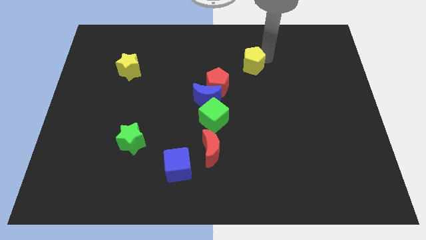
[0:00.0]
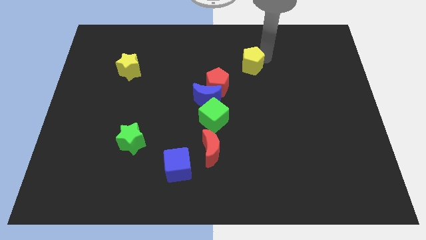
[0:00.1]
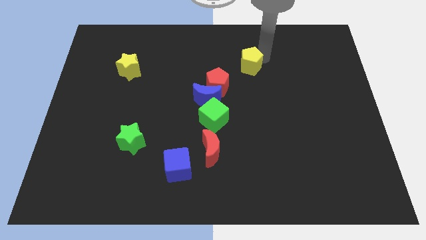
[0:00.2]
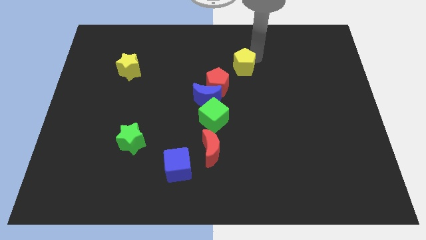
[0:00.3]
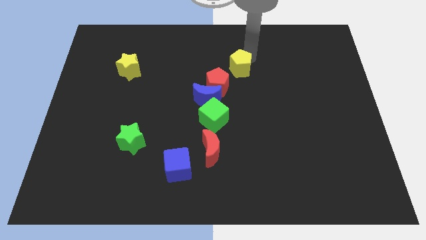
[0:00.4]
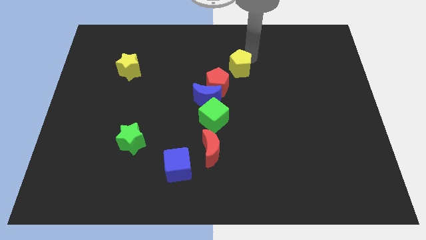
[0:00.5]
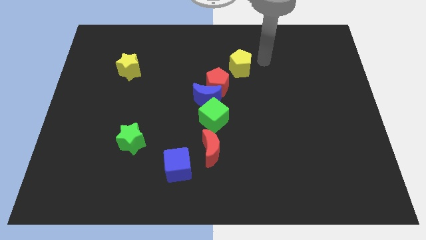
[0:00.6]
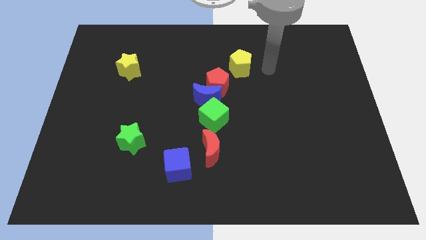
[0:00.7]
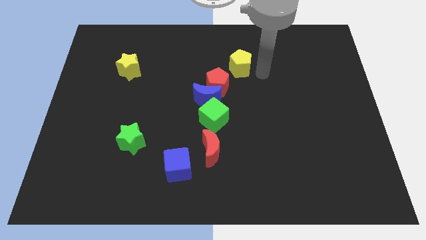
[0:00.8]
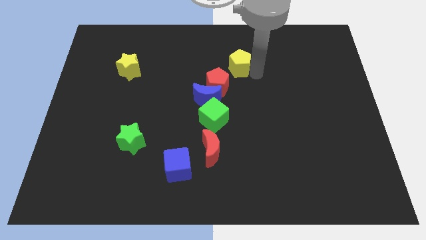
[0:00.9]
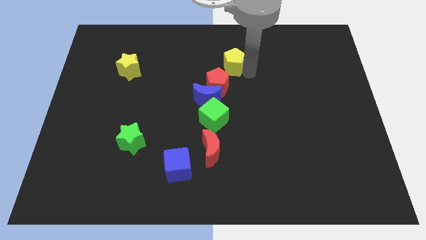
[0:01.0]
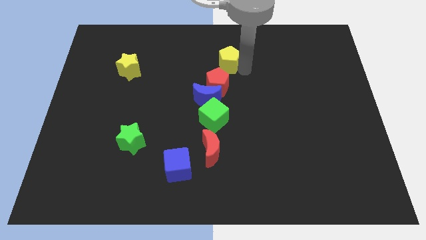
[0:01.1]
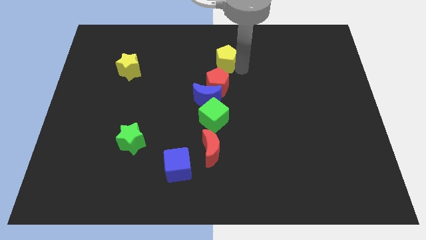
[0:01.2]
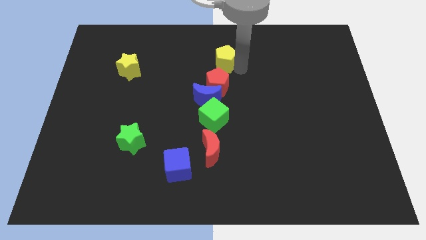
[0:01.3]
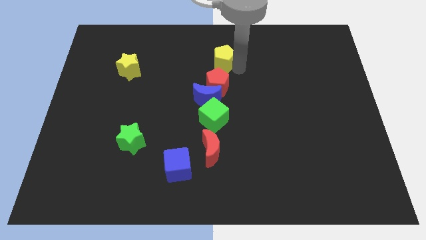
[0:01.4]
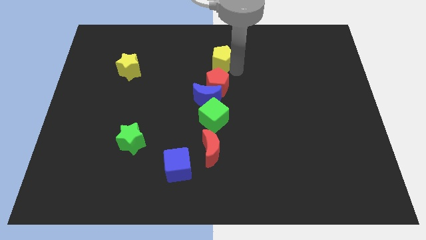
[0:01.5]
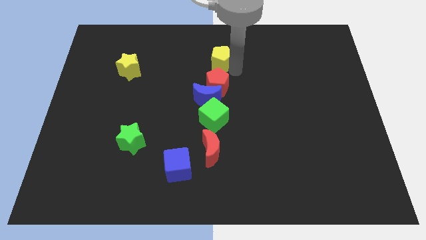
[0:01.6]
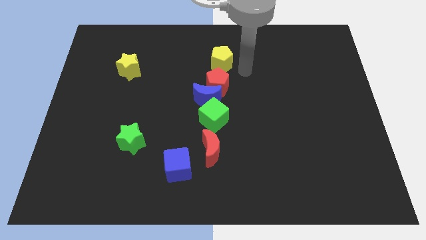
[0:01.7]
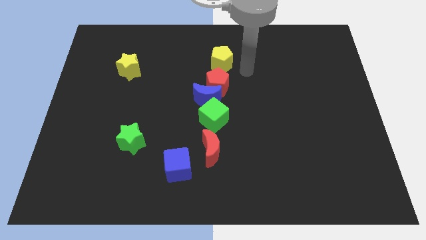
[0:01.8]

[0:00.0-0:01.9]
place the yellow pentagon above the red pentagon

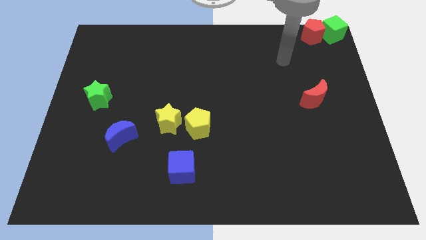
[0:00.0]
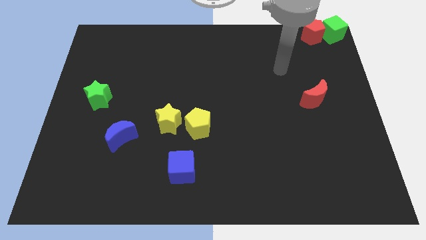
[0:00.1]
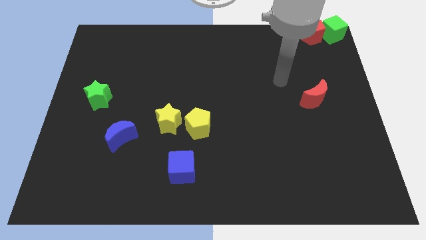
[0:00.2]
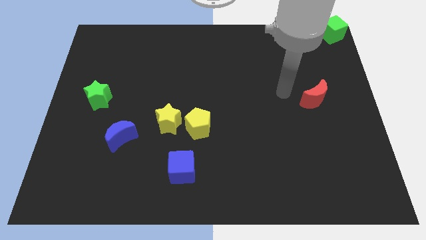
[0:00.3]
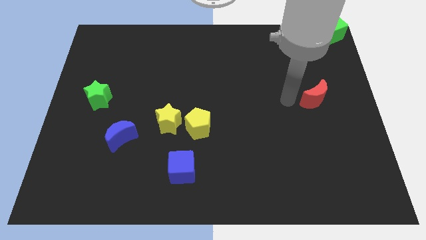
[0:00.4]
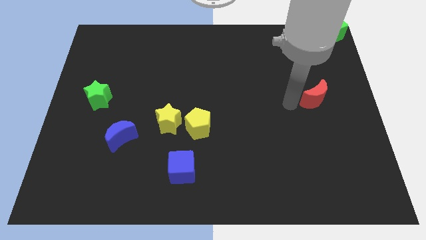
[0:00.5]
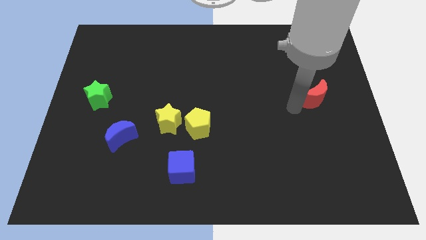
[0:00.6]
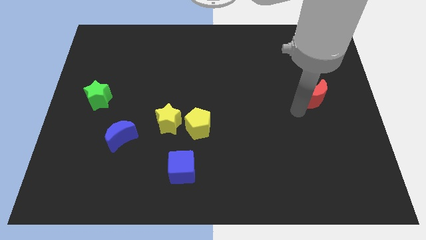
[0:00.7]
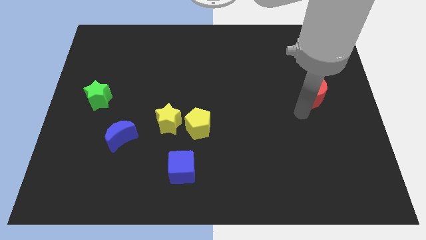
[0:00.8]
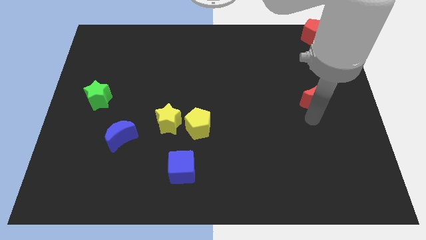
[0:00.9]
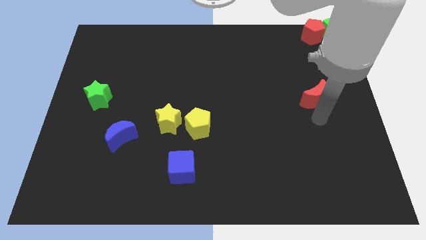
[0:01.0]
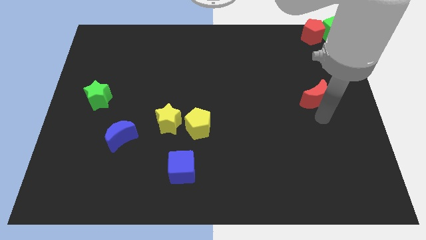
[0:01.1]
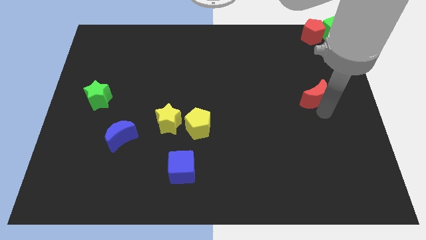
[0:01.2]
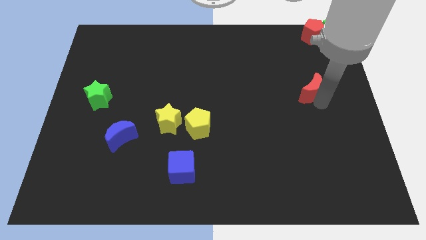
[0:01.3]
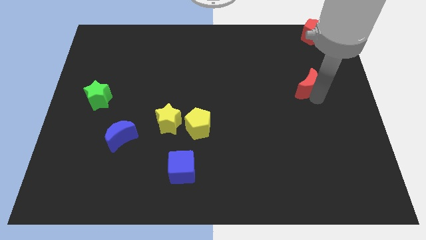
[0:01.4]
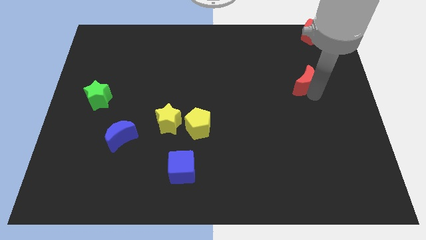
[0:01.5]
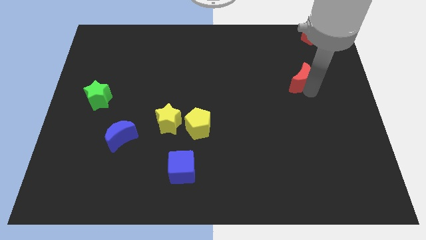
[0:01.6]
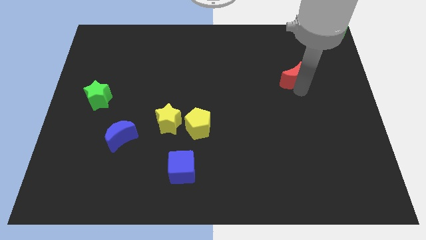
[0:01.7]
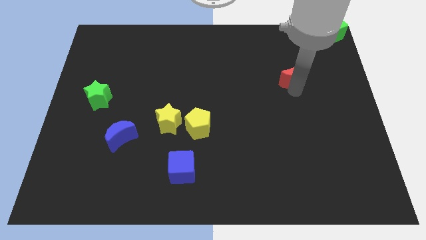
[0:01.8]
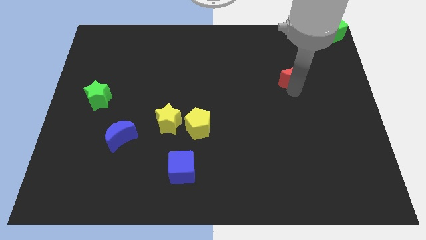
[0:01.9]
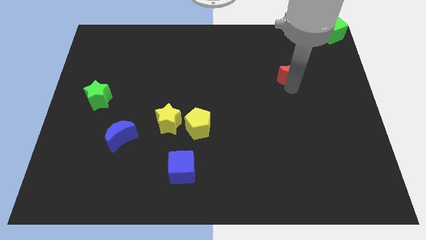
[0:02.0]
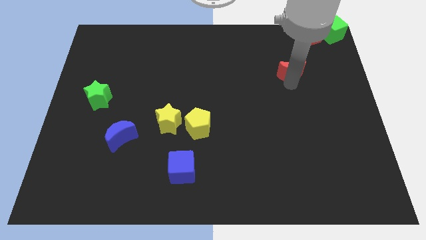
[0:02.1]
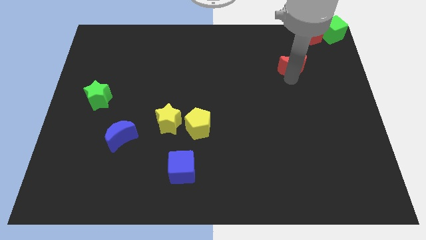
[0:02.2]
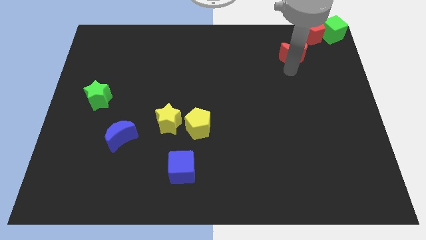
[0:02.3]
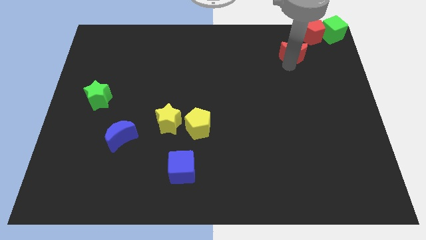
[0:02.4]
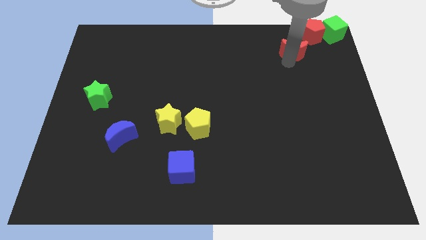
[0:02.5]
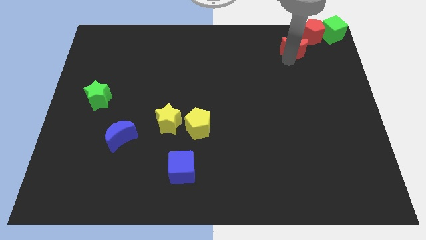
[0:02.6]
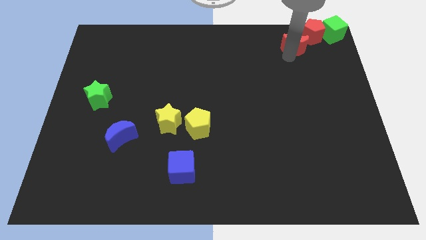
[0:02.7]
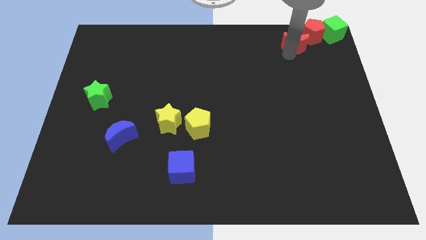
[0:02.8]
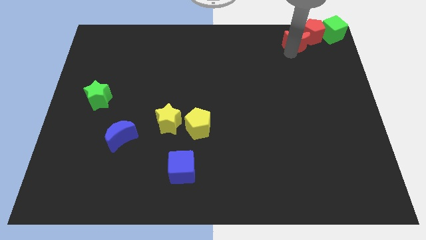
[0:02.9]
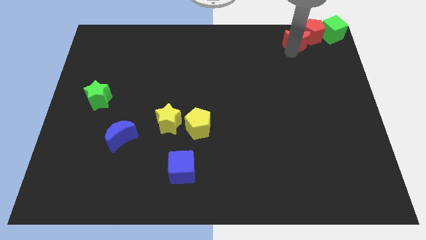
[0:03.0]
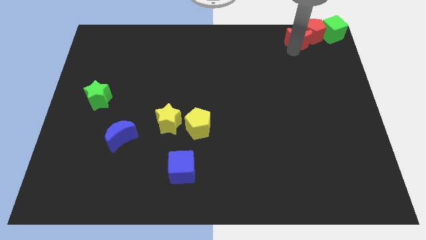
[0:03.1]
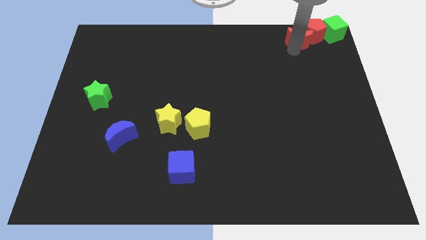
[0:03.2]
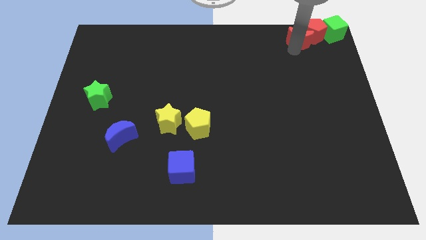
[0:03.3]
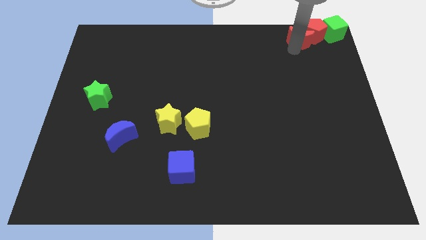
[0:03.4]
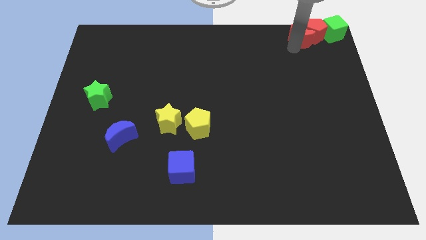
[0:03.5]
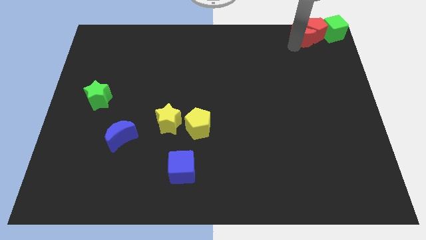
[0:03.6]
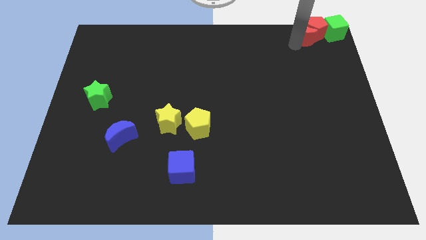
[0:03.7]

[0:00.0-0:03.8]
push red moon in to red pentagon

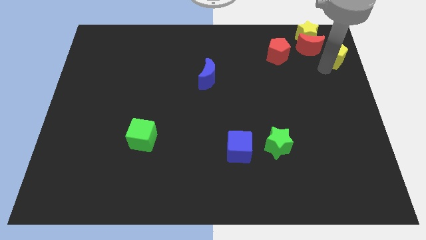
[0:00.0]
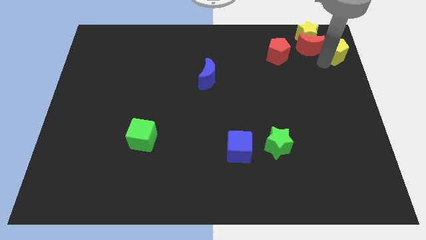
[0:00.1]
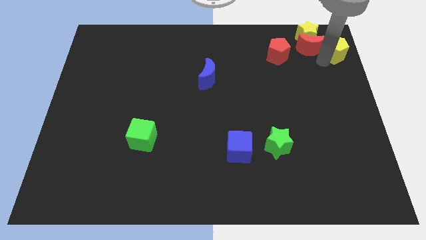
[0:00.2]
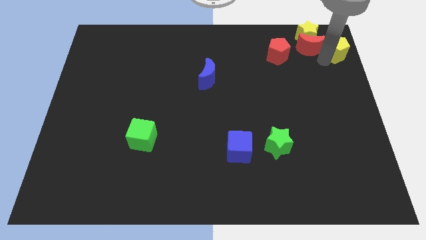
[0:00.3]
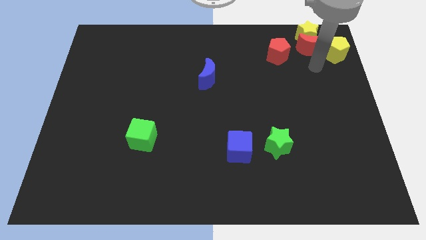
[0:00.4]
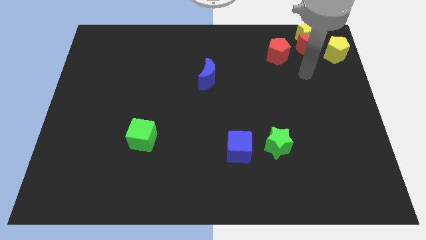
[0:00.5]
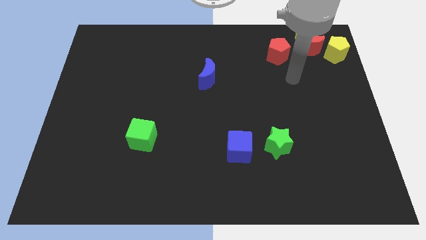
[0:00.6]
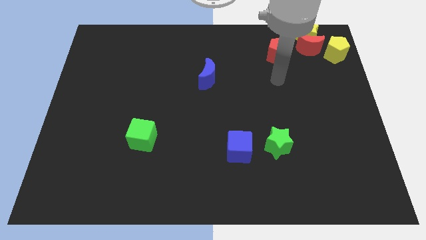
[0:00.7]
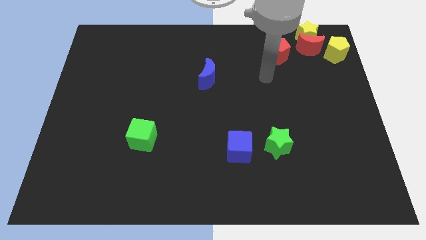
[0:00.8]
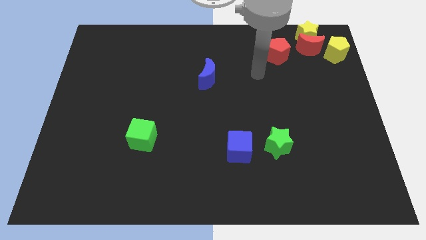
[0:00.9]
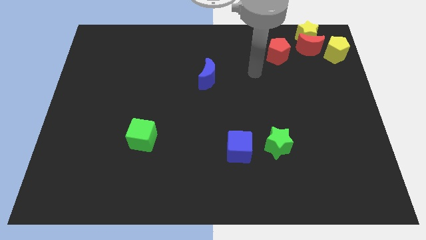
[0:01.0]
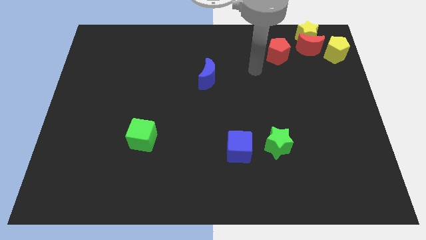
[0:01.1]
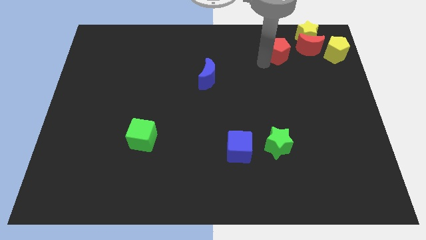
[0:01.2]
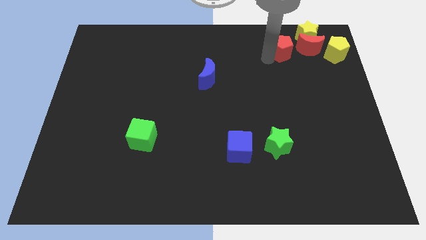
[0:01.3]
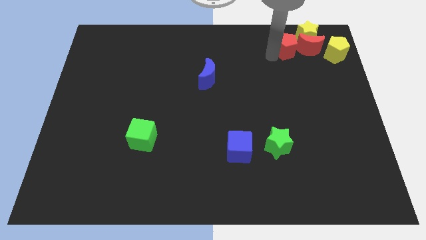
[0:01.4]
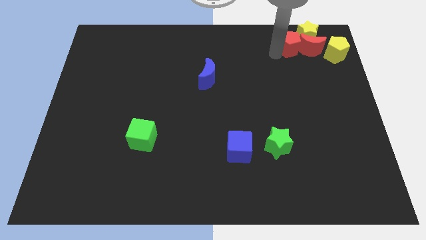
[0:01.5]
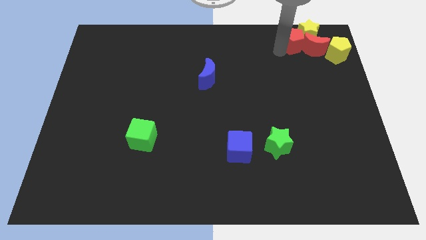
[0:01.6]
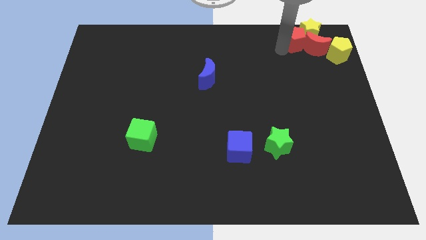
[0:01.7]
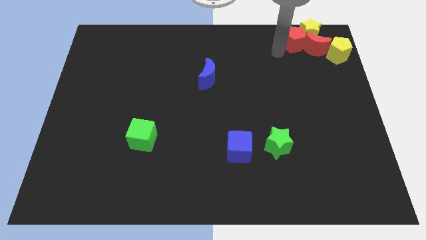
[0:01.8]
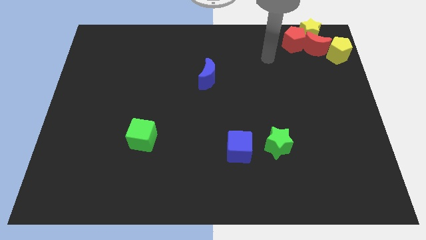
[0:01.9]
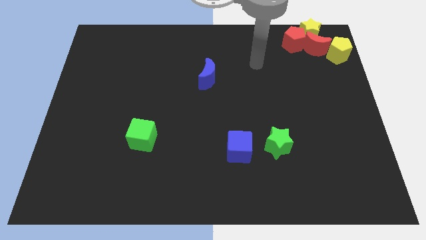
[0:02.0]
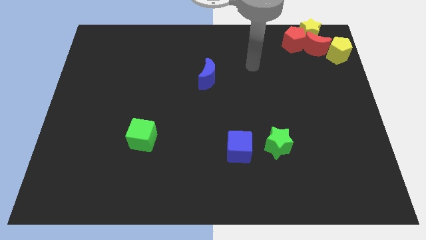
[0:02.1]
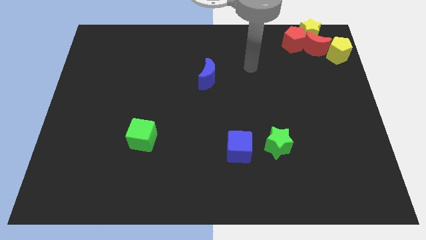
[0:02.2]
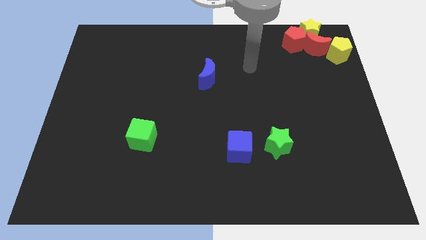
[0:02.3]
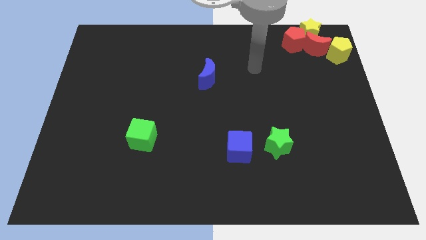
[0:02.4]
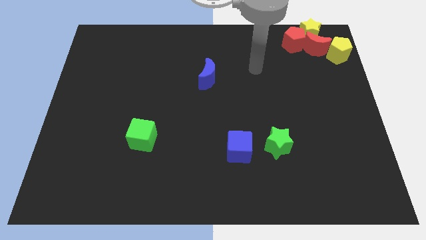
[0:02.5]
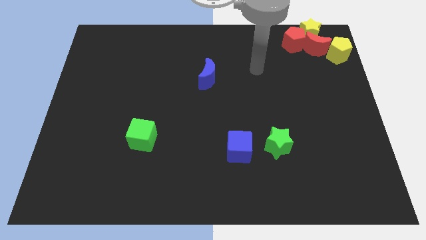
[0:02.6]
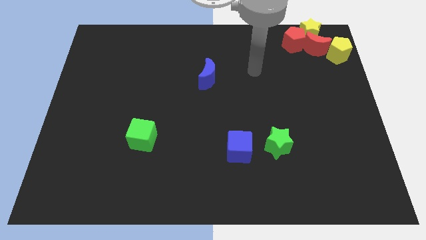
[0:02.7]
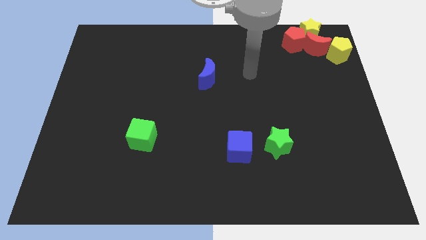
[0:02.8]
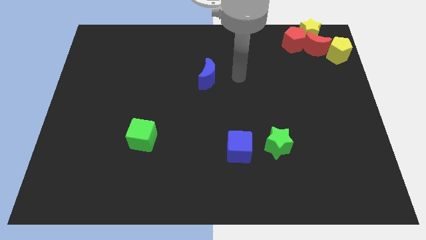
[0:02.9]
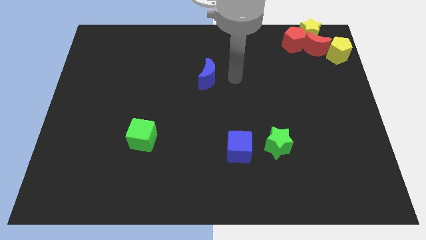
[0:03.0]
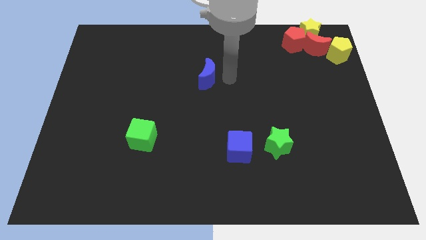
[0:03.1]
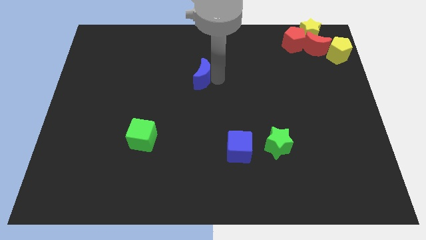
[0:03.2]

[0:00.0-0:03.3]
attach the red pentagon to the red moon

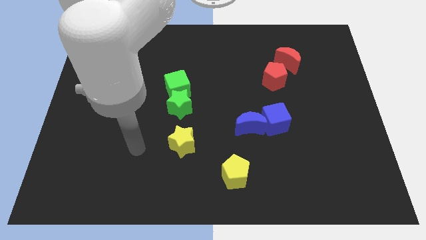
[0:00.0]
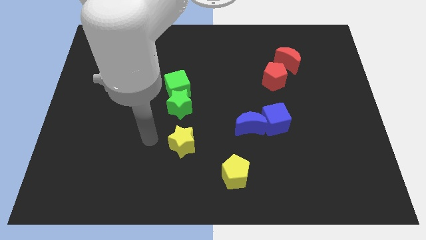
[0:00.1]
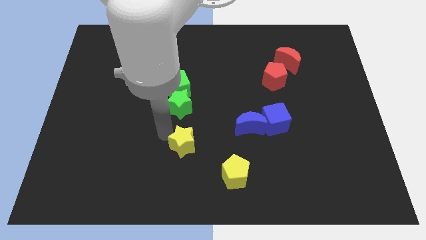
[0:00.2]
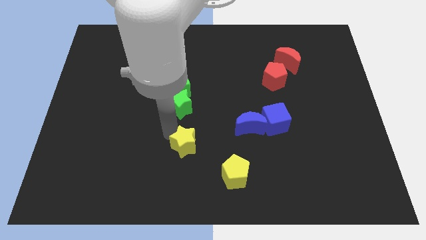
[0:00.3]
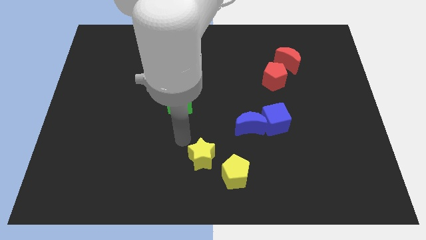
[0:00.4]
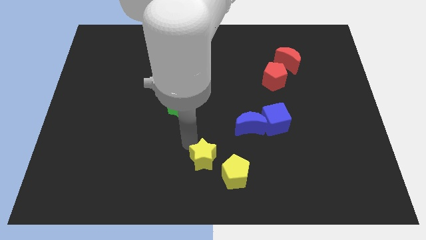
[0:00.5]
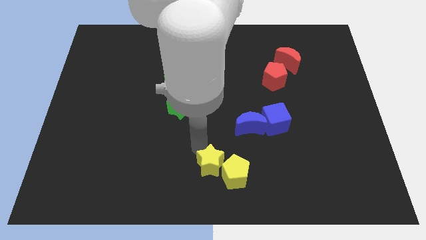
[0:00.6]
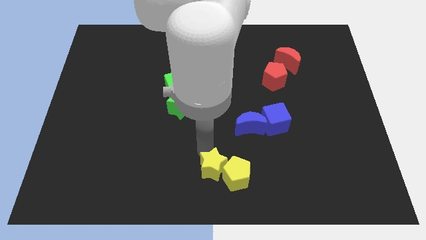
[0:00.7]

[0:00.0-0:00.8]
push yellow star beside yellow pentagon
